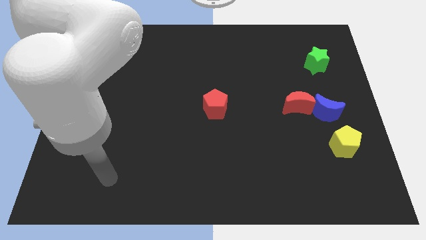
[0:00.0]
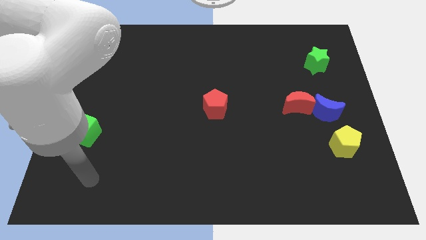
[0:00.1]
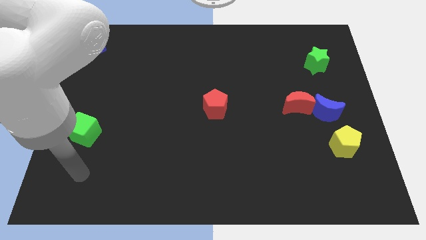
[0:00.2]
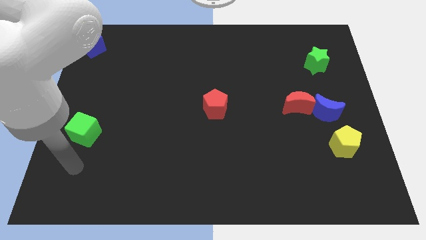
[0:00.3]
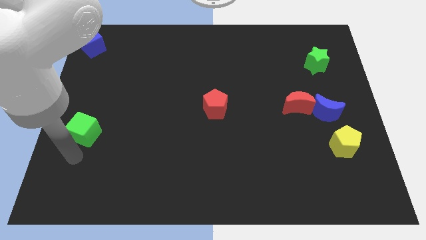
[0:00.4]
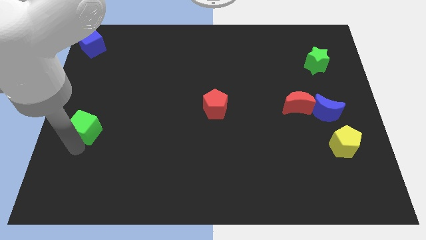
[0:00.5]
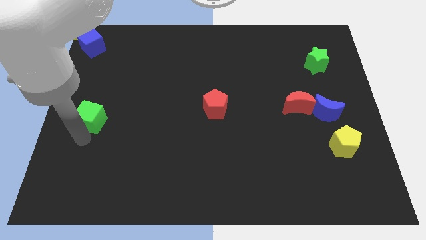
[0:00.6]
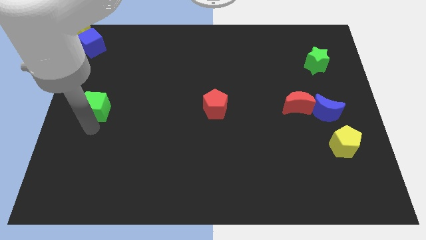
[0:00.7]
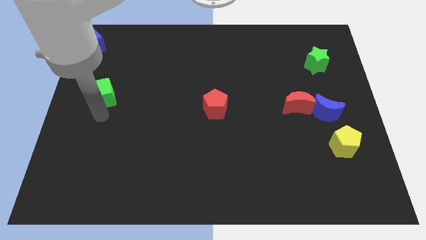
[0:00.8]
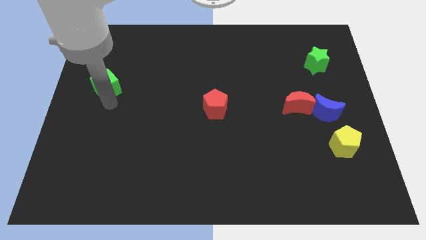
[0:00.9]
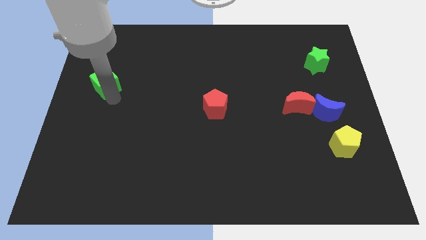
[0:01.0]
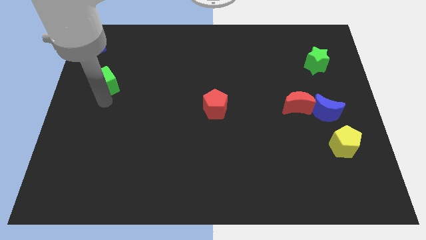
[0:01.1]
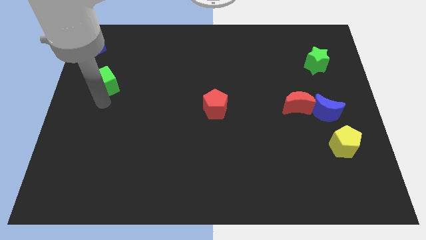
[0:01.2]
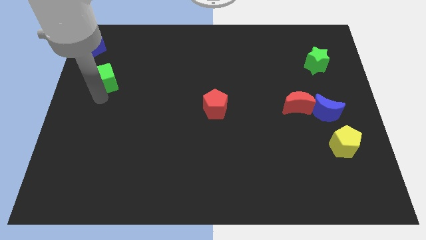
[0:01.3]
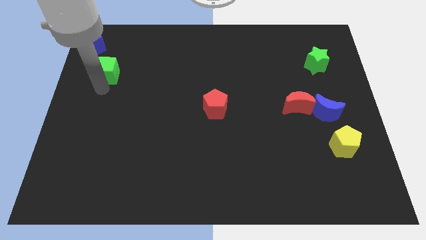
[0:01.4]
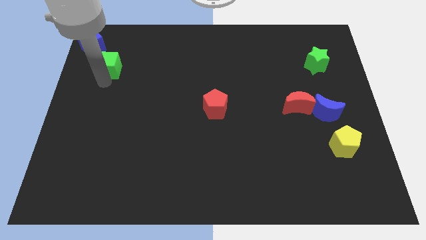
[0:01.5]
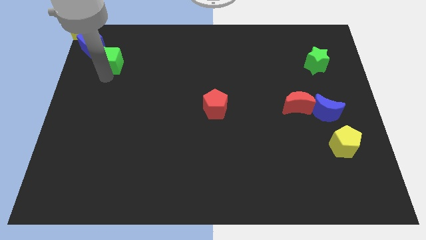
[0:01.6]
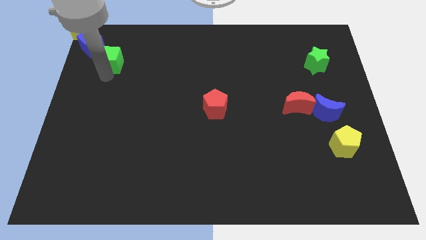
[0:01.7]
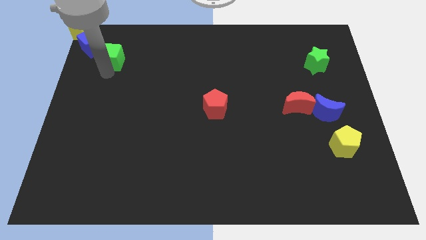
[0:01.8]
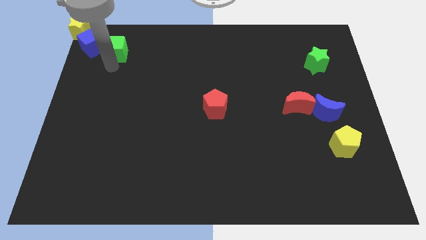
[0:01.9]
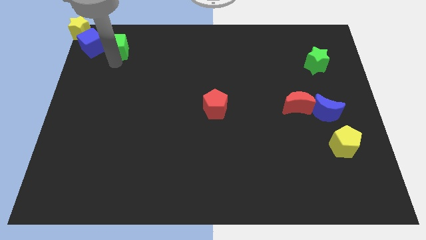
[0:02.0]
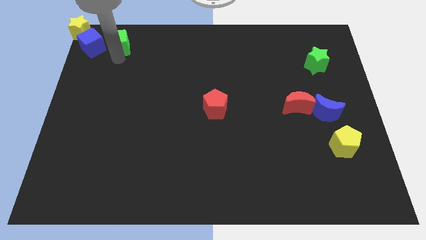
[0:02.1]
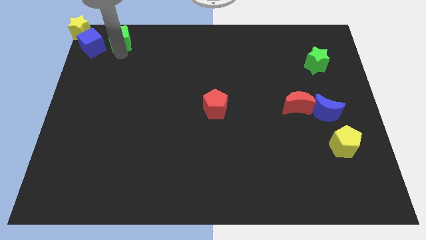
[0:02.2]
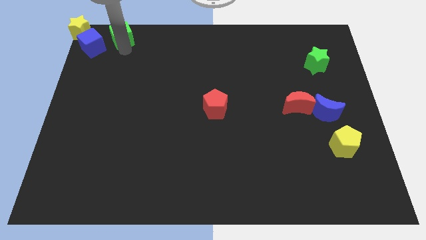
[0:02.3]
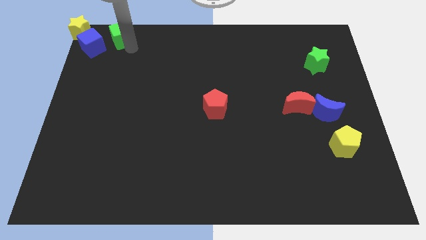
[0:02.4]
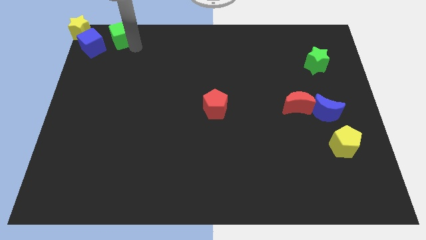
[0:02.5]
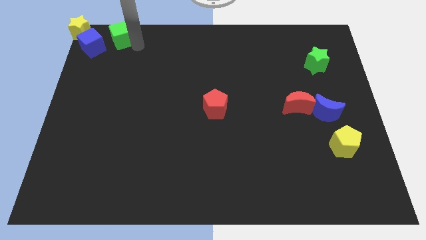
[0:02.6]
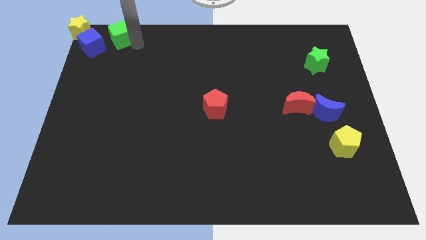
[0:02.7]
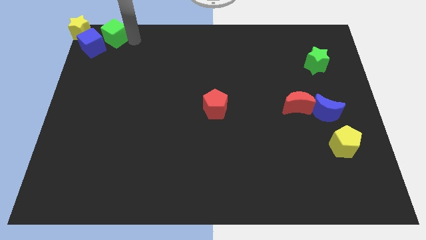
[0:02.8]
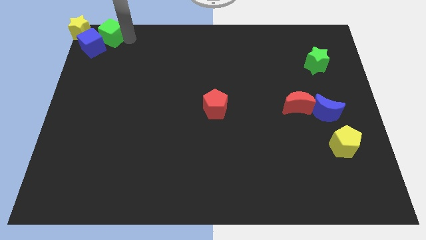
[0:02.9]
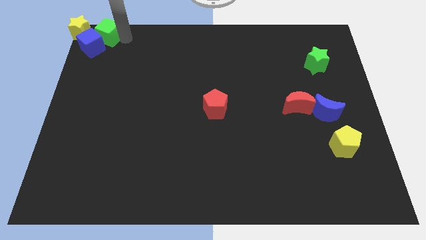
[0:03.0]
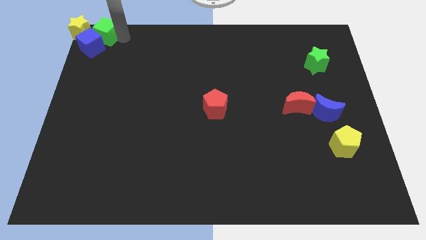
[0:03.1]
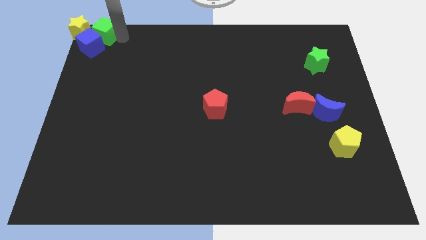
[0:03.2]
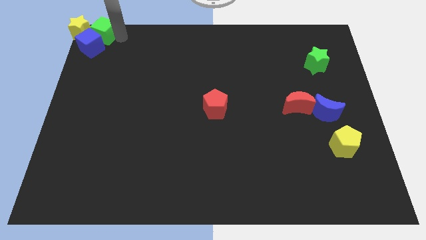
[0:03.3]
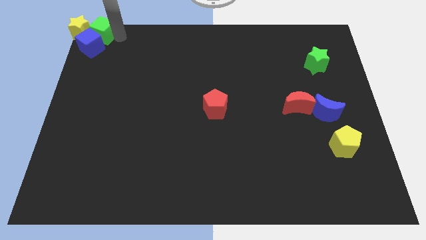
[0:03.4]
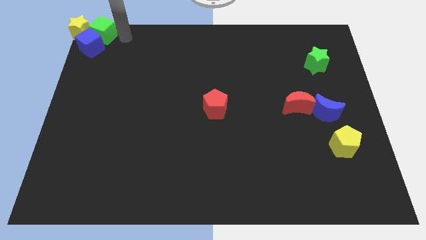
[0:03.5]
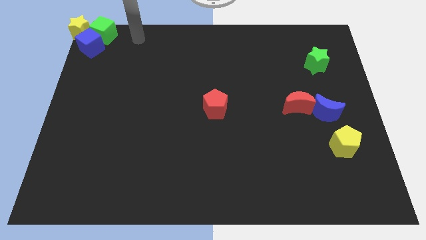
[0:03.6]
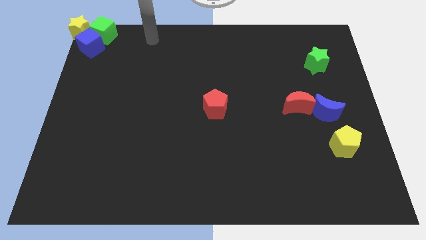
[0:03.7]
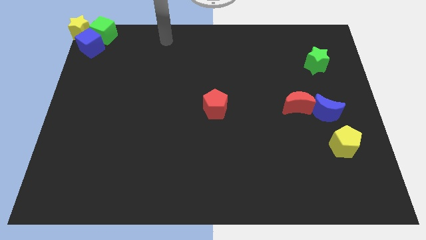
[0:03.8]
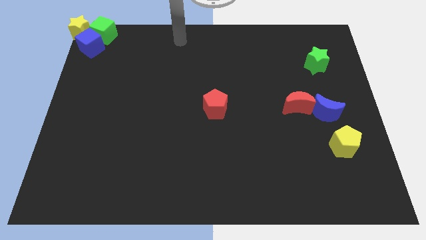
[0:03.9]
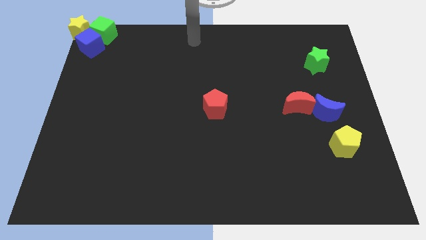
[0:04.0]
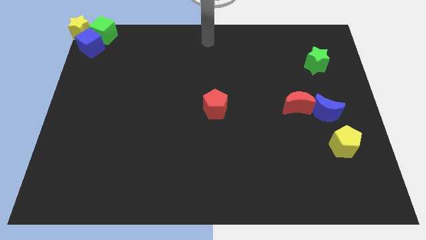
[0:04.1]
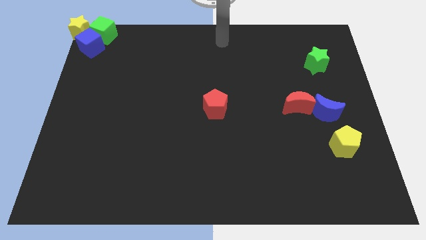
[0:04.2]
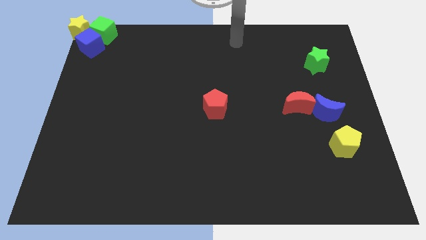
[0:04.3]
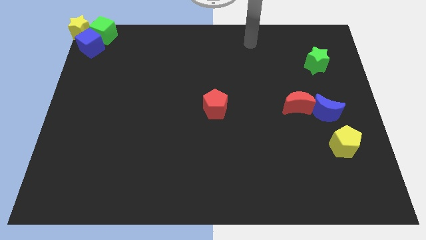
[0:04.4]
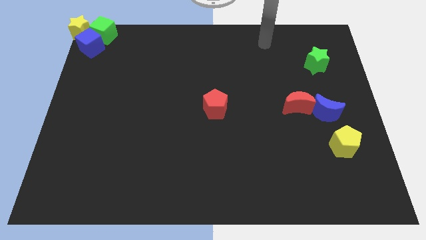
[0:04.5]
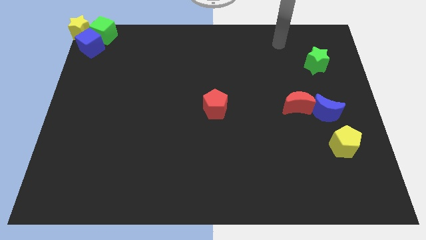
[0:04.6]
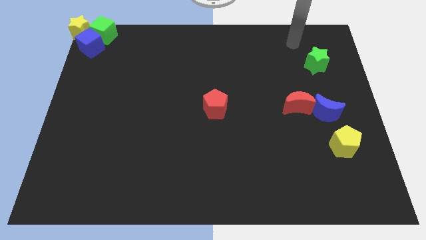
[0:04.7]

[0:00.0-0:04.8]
move the green cube towards the right side of the yellow star

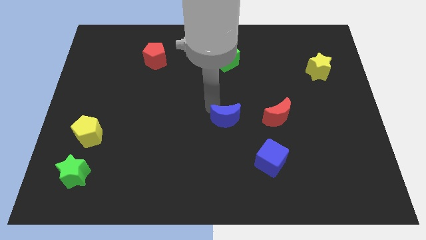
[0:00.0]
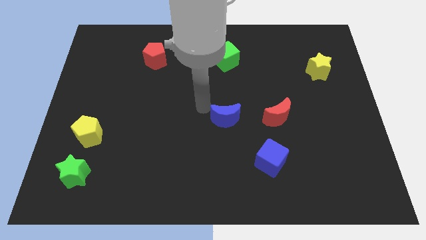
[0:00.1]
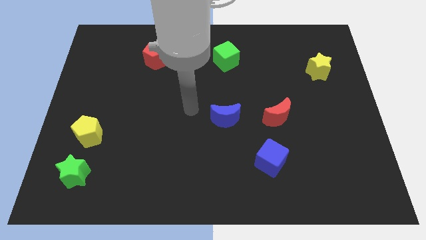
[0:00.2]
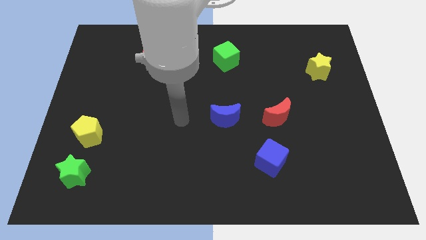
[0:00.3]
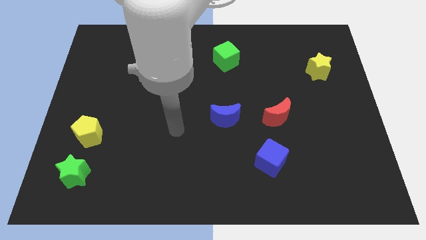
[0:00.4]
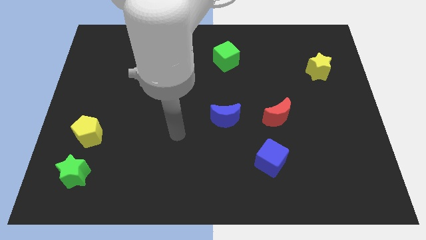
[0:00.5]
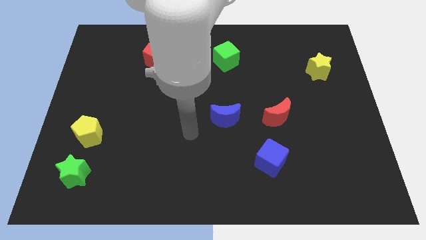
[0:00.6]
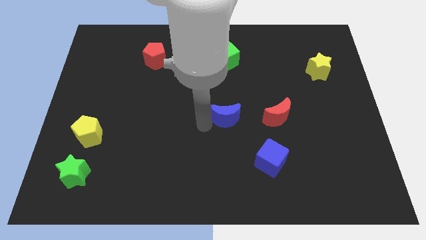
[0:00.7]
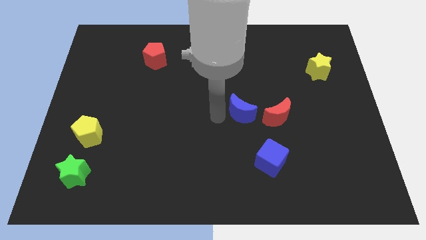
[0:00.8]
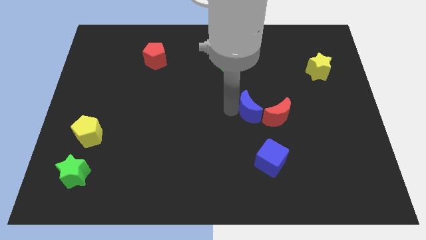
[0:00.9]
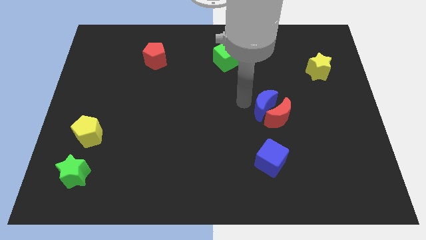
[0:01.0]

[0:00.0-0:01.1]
place blue moon above red moon

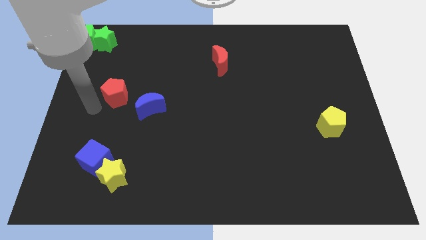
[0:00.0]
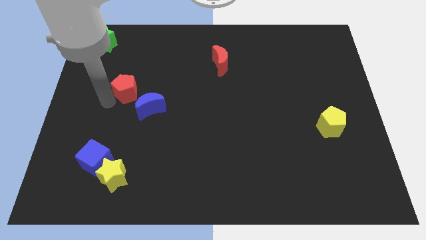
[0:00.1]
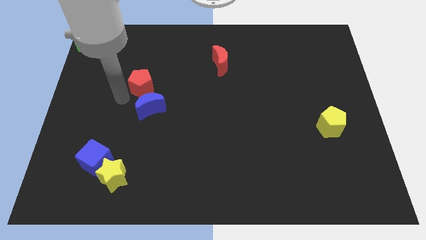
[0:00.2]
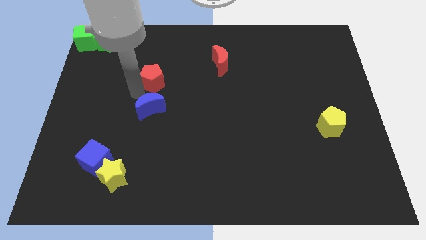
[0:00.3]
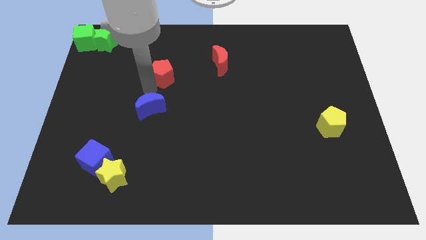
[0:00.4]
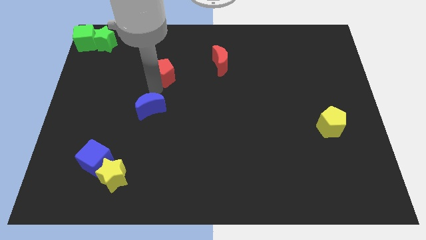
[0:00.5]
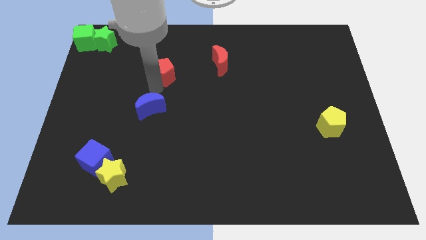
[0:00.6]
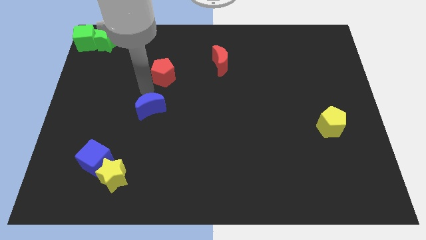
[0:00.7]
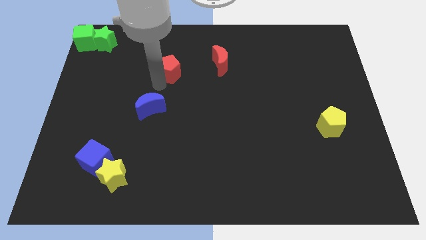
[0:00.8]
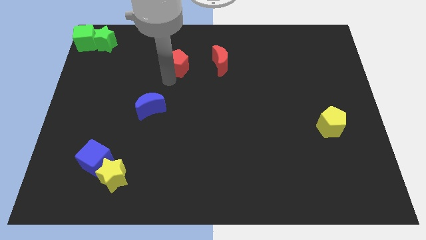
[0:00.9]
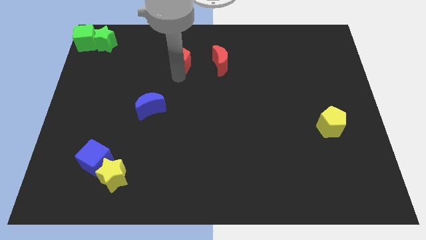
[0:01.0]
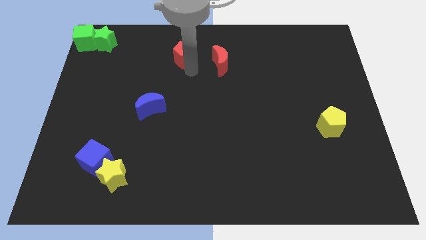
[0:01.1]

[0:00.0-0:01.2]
place the red pentagon parallel left to the red moon

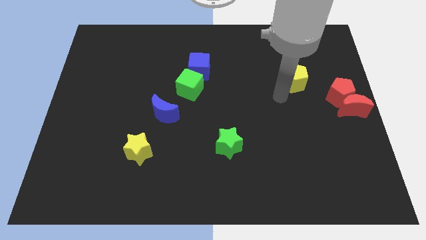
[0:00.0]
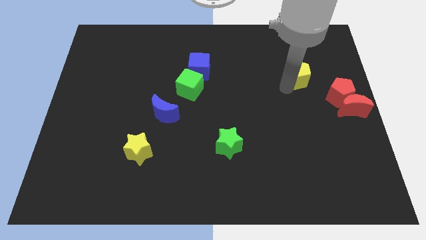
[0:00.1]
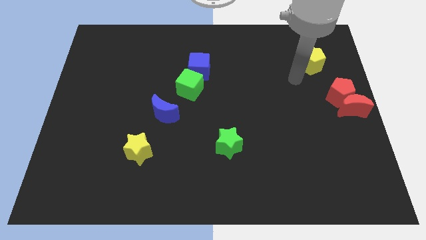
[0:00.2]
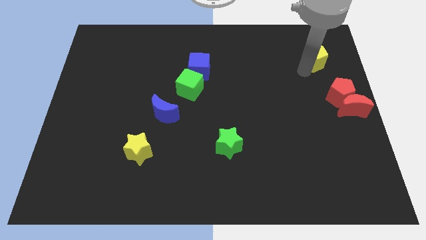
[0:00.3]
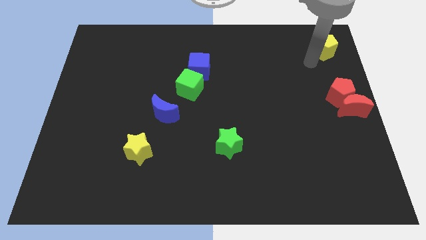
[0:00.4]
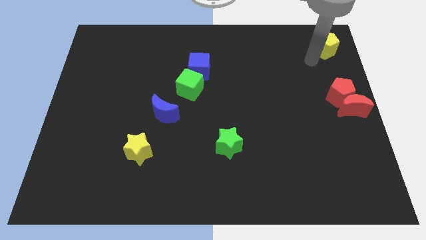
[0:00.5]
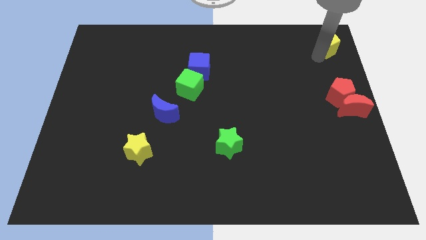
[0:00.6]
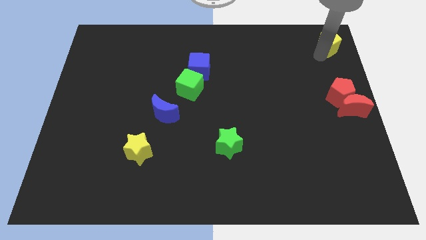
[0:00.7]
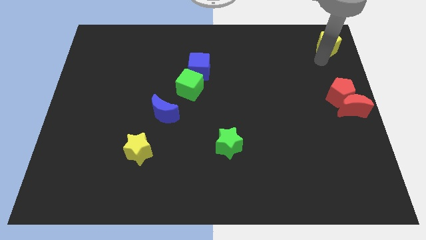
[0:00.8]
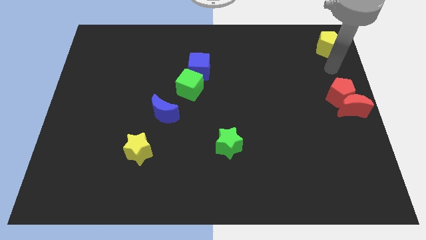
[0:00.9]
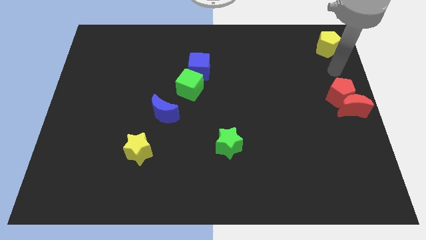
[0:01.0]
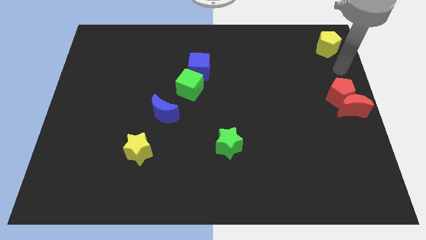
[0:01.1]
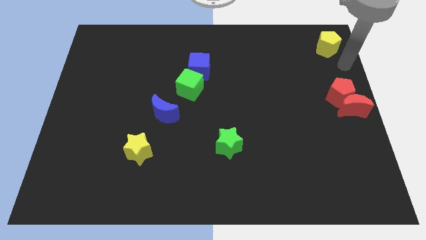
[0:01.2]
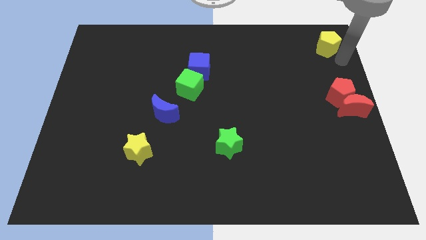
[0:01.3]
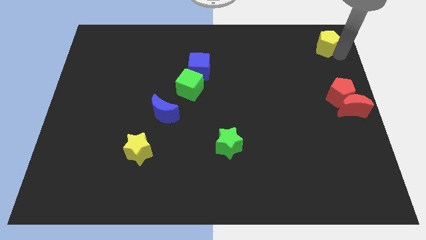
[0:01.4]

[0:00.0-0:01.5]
place the yellow pentagon top right corner of the board

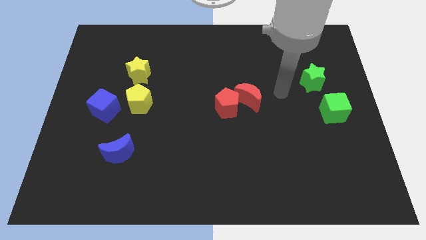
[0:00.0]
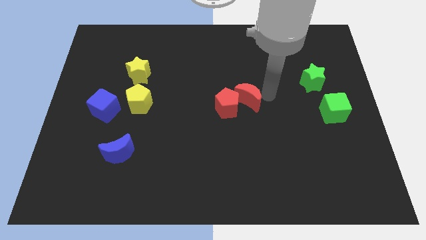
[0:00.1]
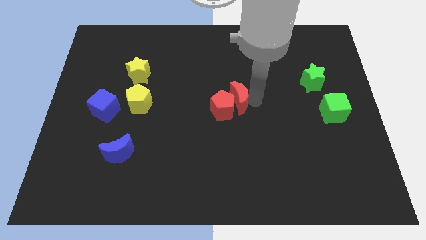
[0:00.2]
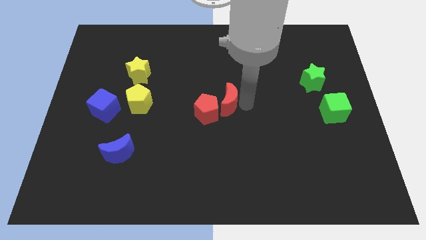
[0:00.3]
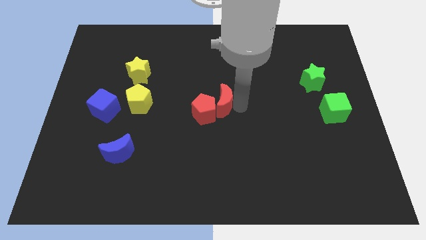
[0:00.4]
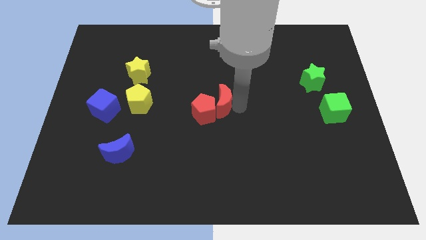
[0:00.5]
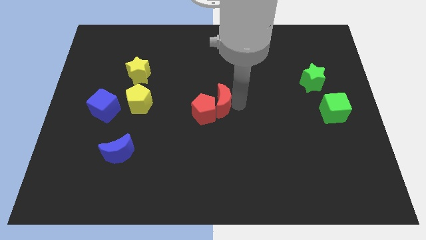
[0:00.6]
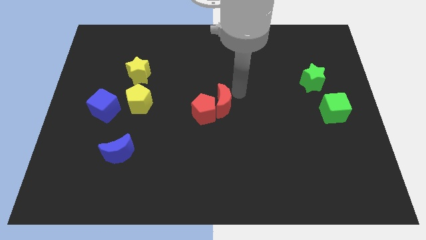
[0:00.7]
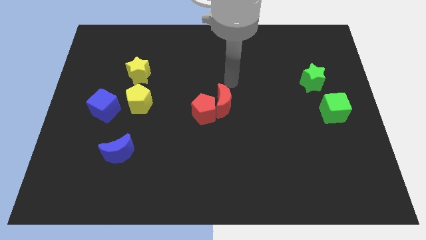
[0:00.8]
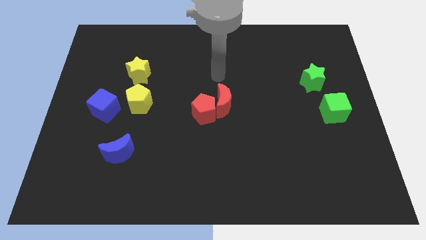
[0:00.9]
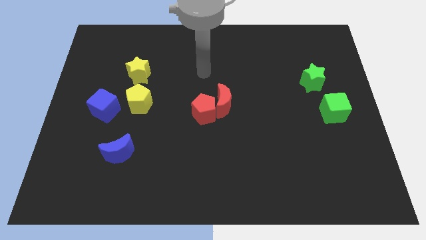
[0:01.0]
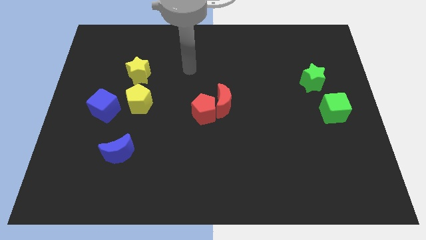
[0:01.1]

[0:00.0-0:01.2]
push the red blocks to the left of the board
